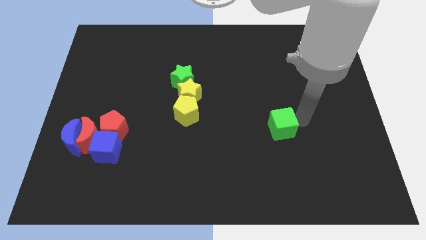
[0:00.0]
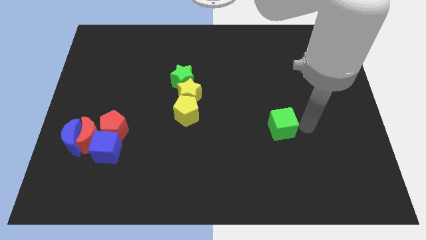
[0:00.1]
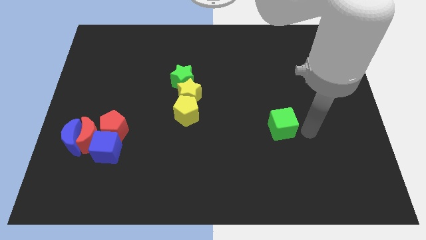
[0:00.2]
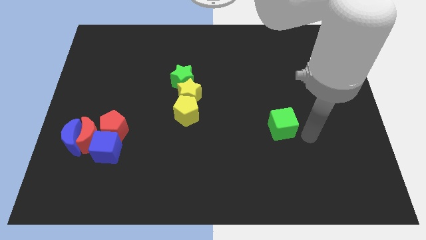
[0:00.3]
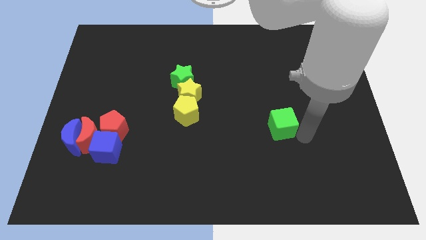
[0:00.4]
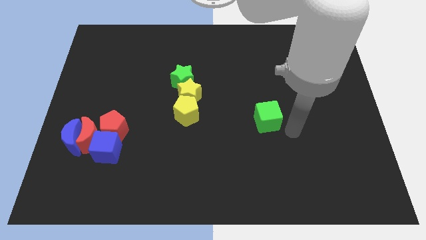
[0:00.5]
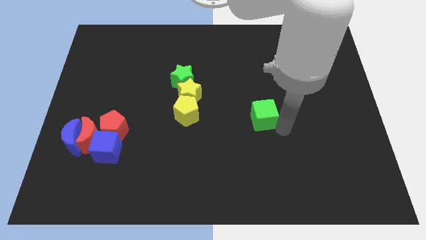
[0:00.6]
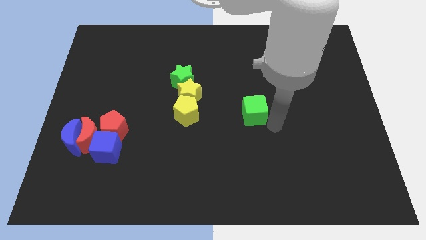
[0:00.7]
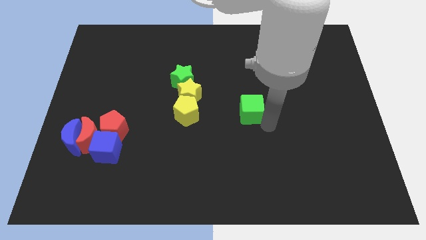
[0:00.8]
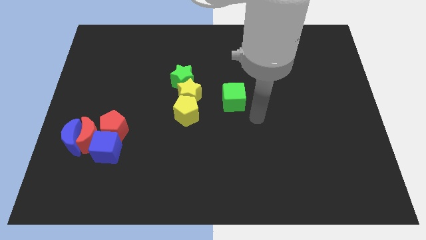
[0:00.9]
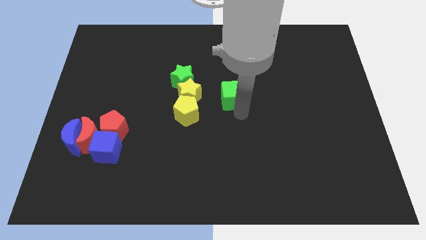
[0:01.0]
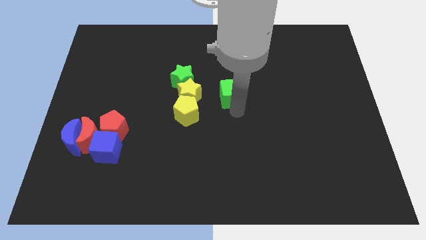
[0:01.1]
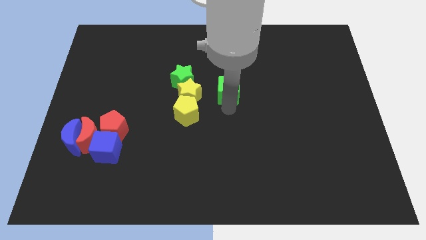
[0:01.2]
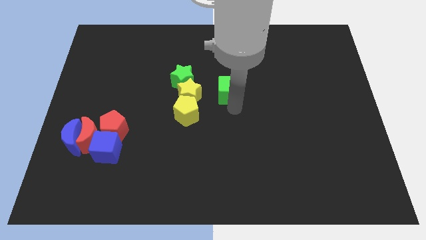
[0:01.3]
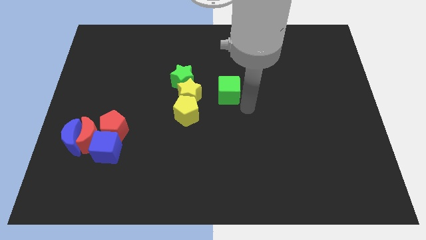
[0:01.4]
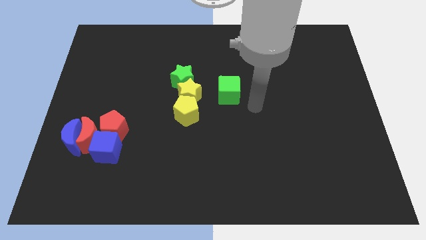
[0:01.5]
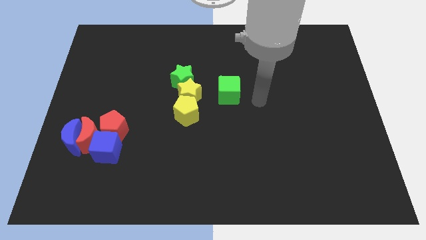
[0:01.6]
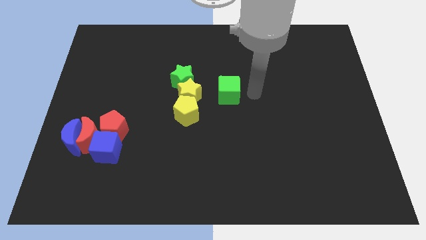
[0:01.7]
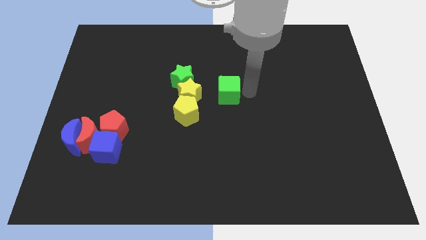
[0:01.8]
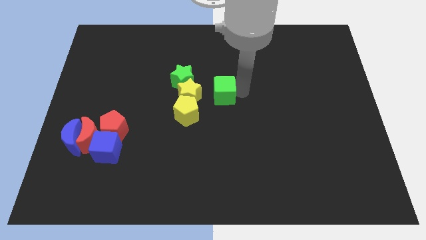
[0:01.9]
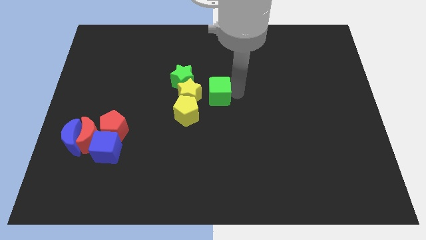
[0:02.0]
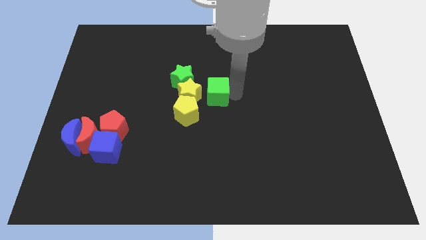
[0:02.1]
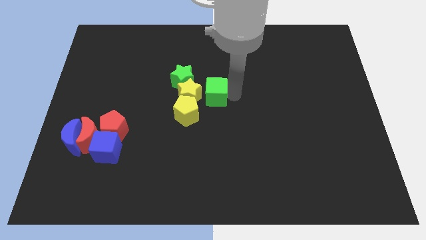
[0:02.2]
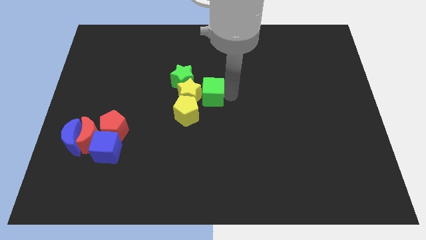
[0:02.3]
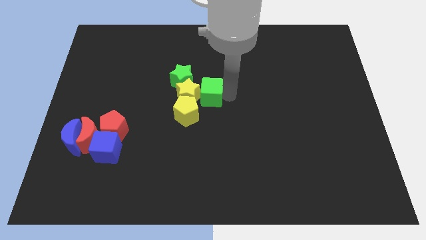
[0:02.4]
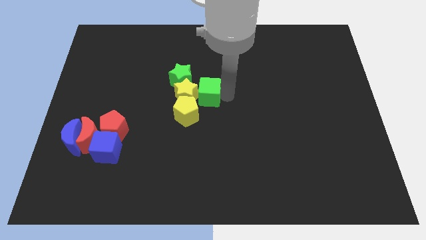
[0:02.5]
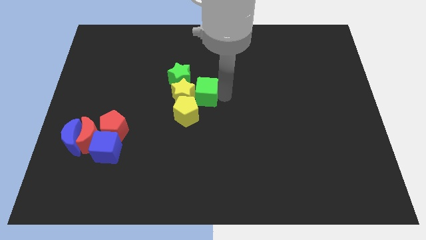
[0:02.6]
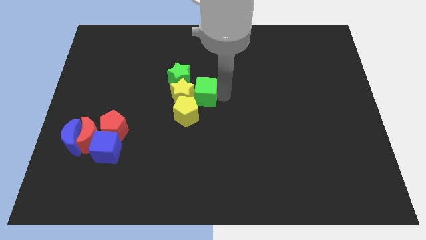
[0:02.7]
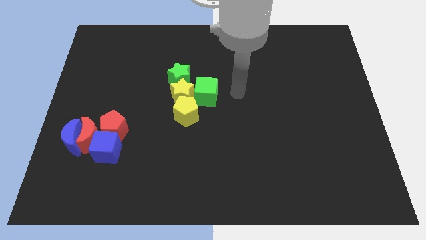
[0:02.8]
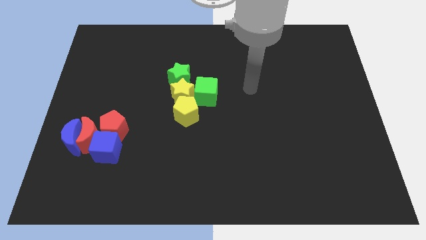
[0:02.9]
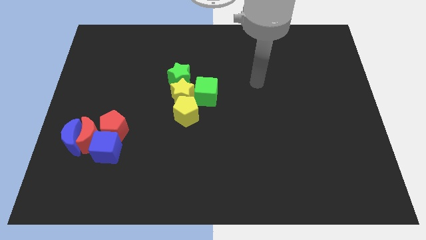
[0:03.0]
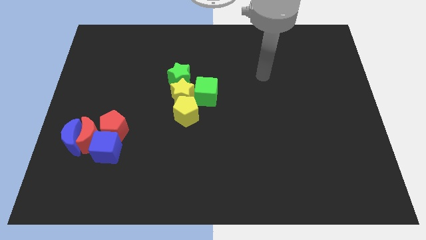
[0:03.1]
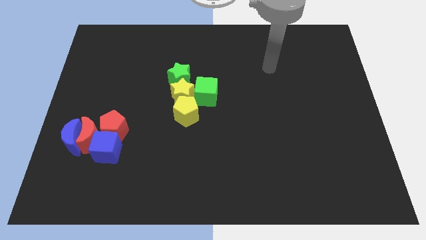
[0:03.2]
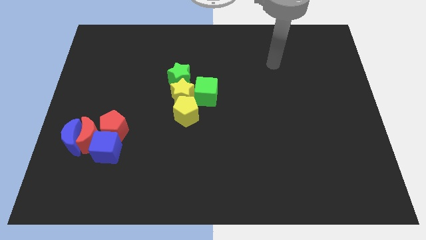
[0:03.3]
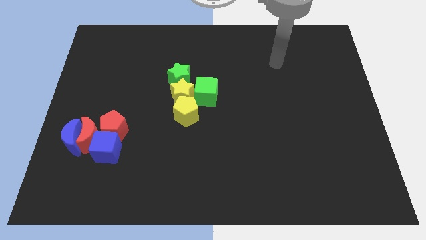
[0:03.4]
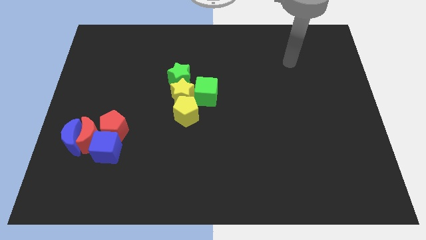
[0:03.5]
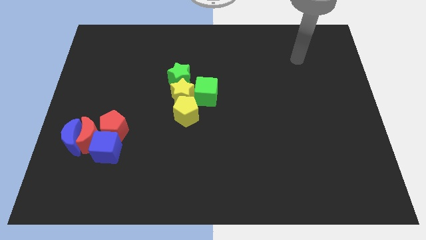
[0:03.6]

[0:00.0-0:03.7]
push the green cube into the yellow star

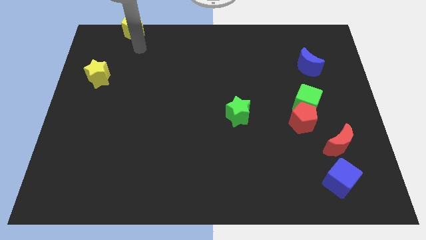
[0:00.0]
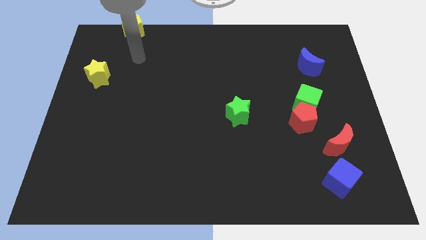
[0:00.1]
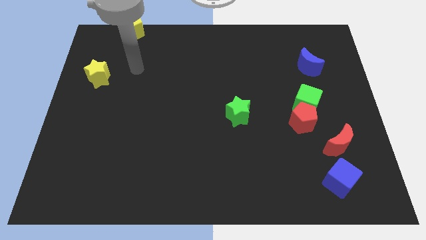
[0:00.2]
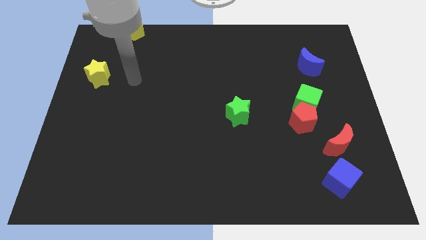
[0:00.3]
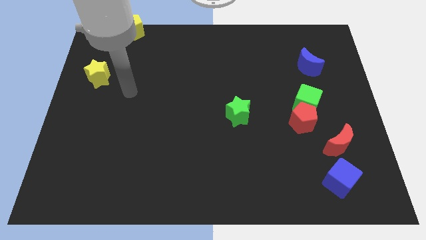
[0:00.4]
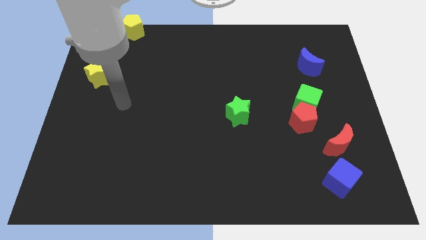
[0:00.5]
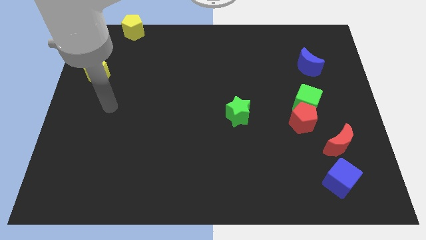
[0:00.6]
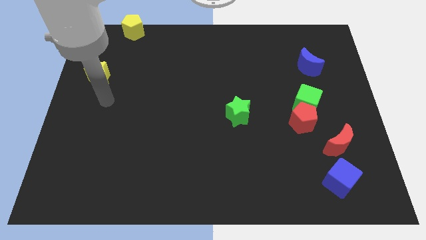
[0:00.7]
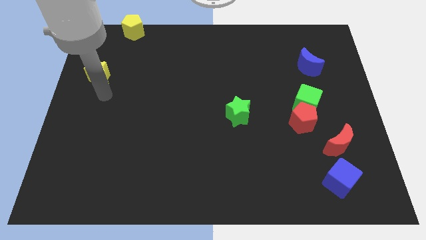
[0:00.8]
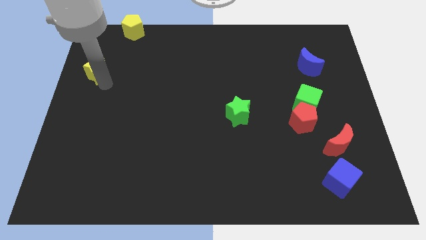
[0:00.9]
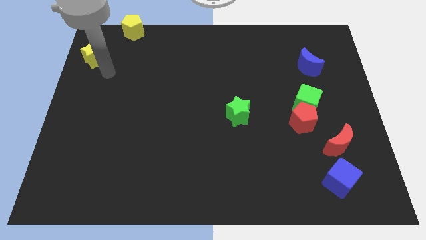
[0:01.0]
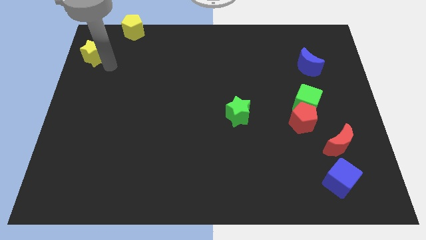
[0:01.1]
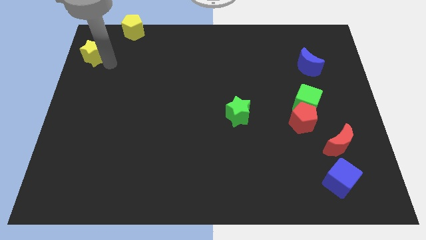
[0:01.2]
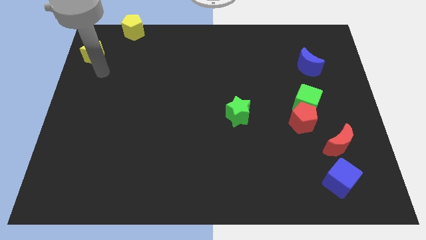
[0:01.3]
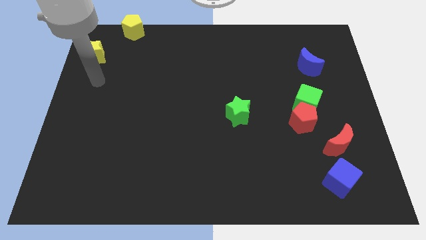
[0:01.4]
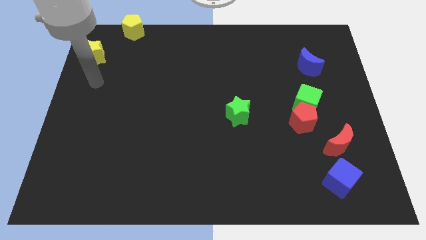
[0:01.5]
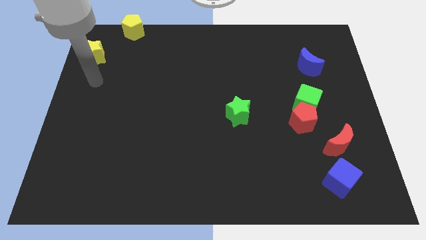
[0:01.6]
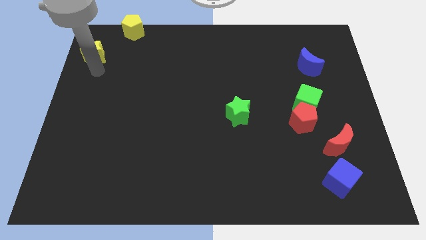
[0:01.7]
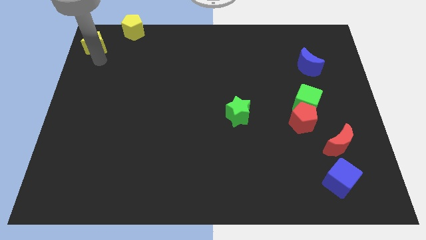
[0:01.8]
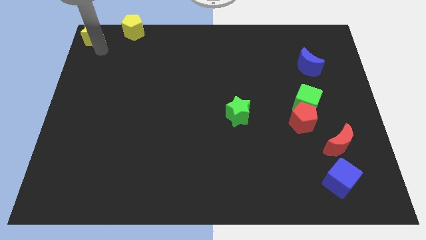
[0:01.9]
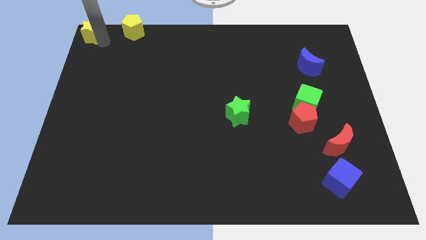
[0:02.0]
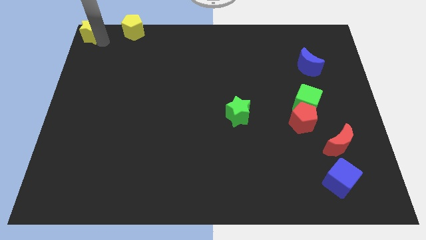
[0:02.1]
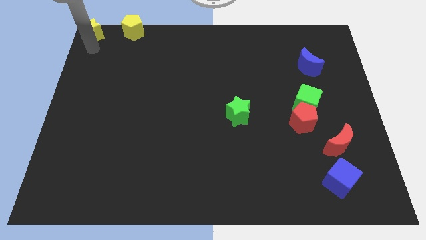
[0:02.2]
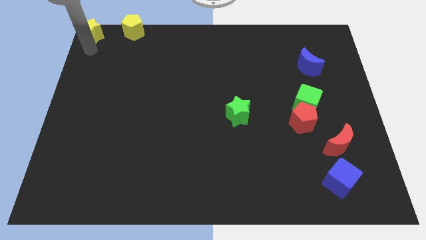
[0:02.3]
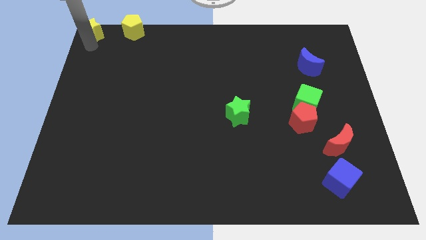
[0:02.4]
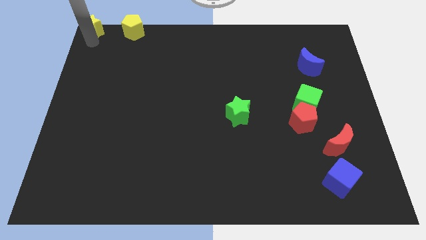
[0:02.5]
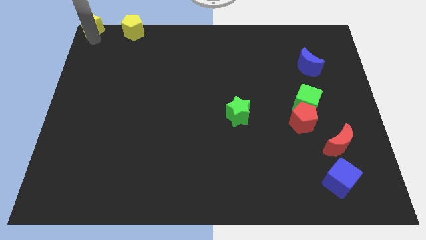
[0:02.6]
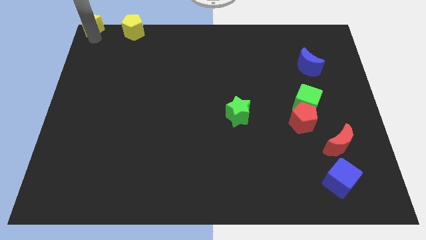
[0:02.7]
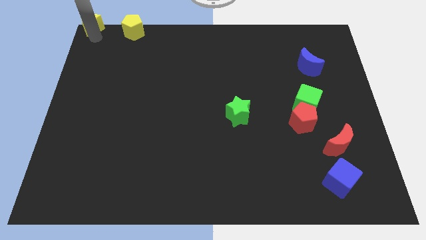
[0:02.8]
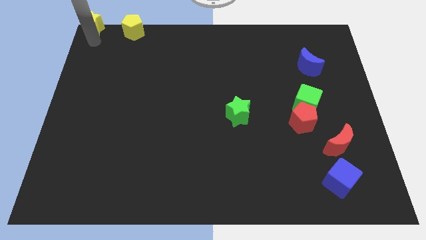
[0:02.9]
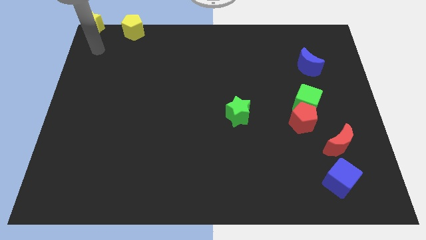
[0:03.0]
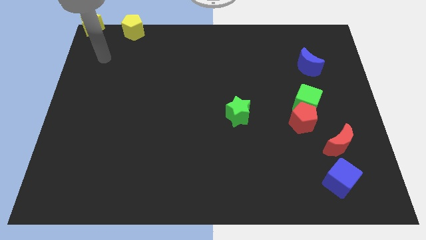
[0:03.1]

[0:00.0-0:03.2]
push the yellow star left to the yellow pentagon

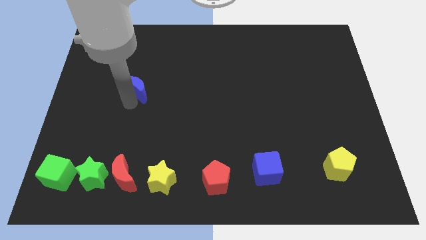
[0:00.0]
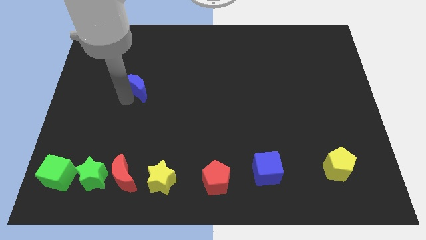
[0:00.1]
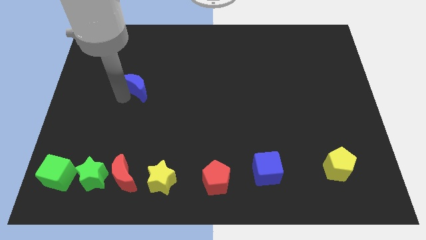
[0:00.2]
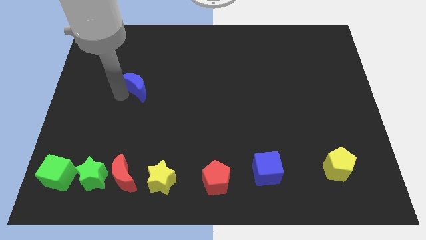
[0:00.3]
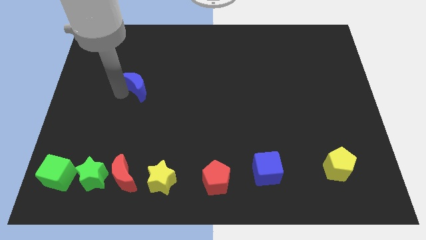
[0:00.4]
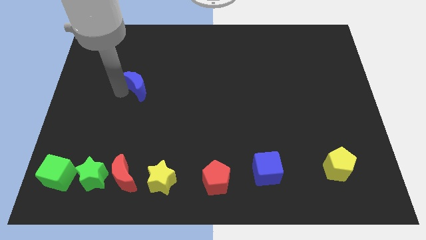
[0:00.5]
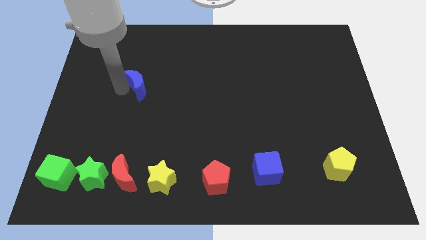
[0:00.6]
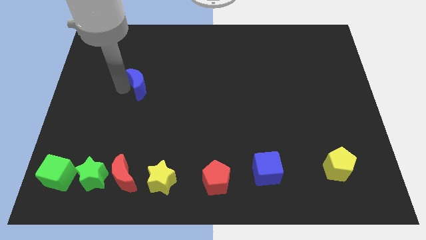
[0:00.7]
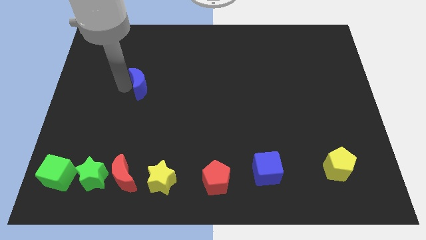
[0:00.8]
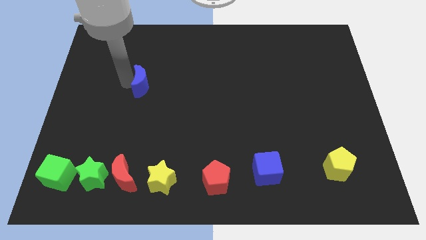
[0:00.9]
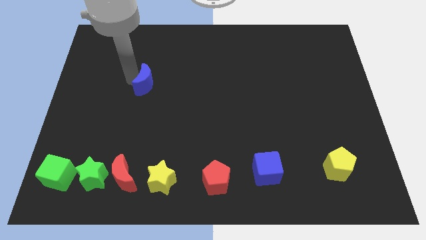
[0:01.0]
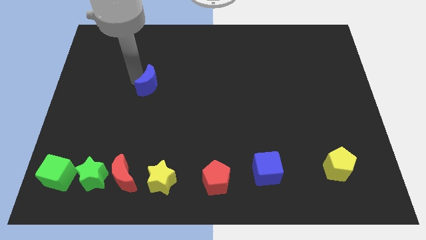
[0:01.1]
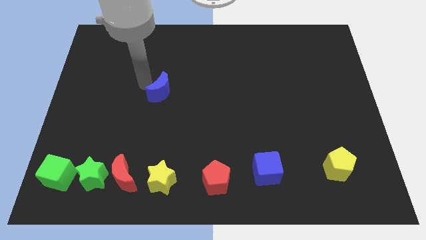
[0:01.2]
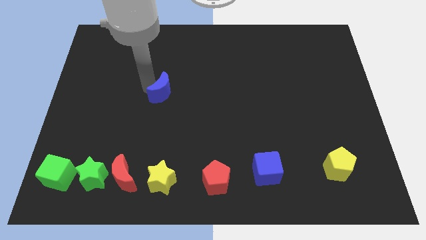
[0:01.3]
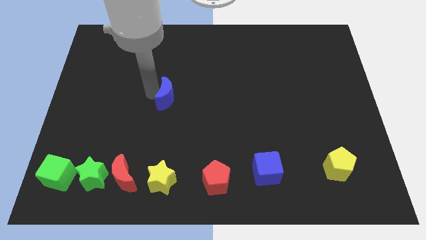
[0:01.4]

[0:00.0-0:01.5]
push the blue crescent on top of yellow star

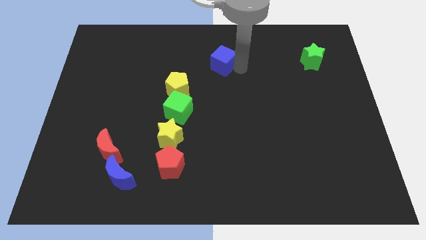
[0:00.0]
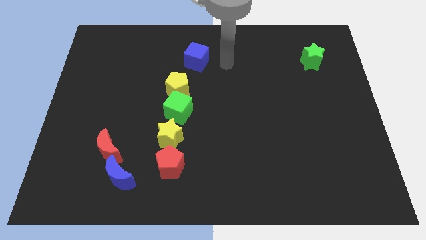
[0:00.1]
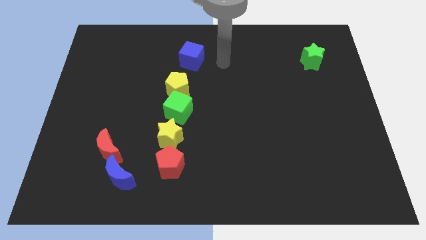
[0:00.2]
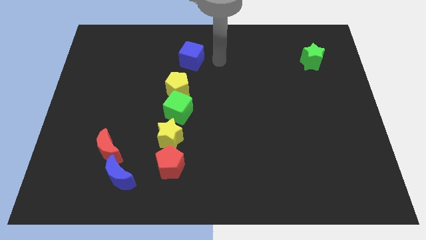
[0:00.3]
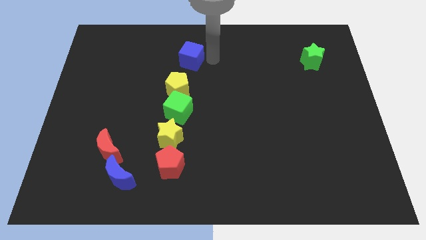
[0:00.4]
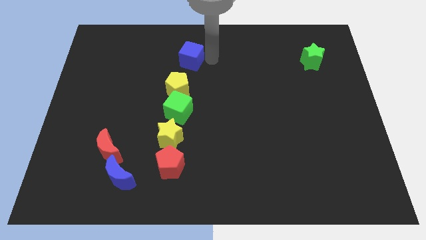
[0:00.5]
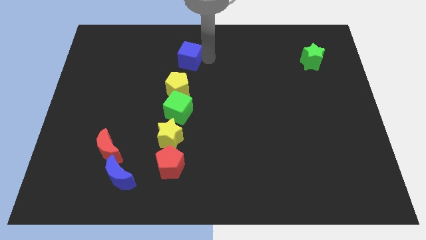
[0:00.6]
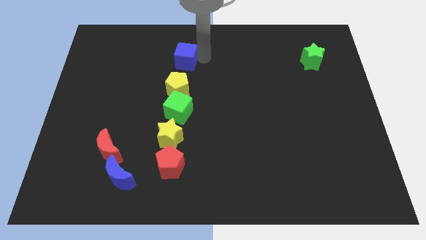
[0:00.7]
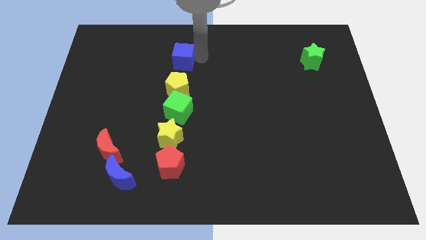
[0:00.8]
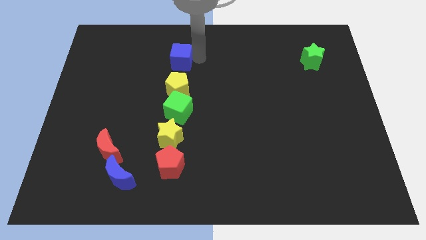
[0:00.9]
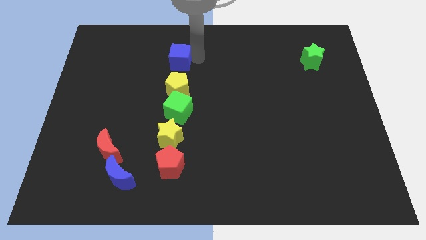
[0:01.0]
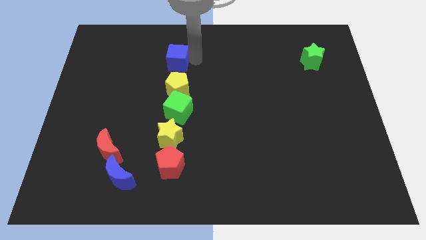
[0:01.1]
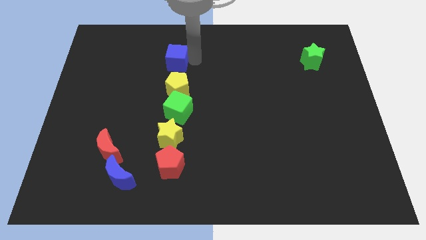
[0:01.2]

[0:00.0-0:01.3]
place the blue cube vertically above the yellow pentagon
